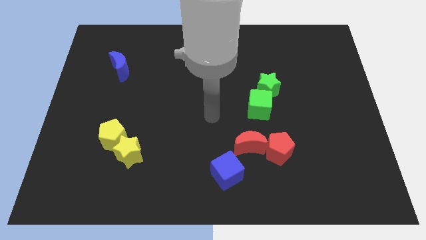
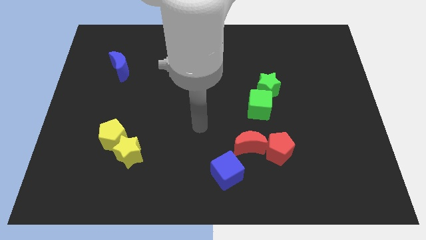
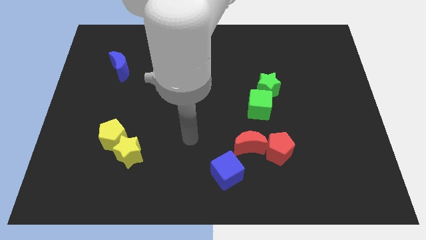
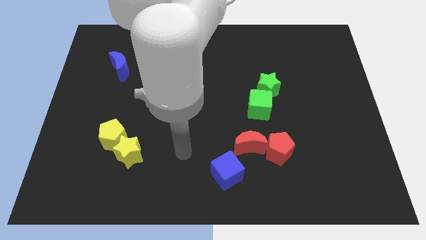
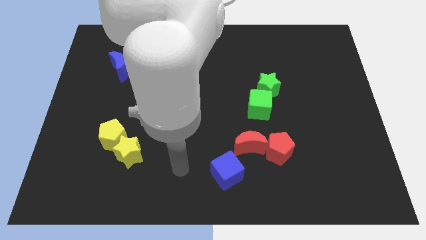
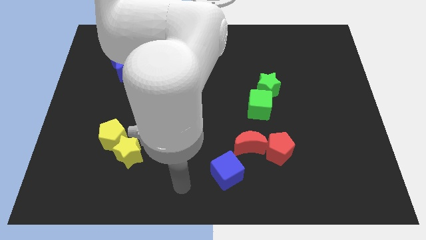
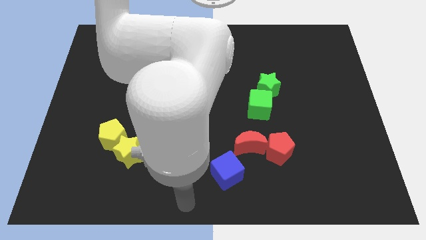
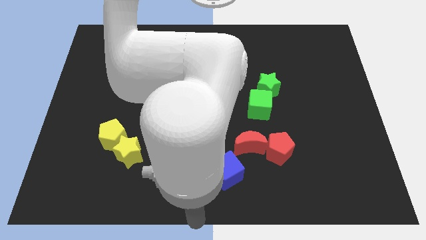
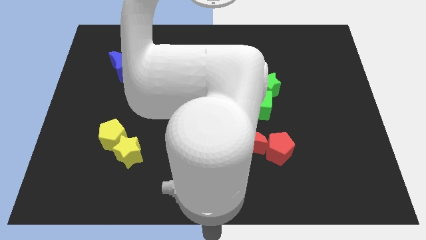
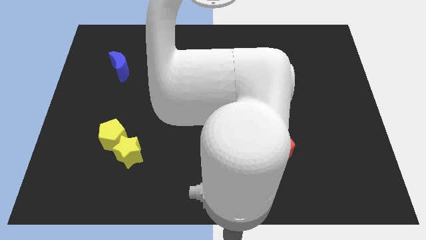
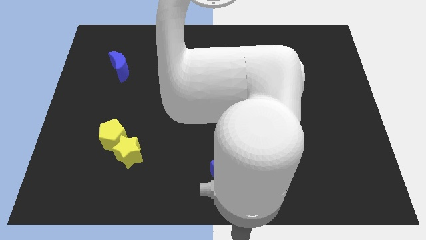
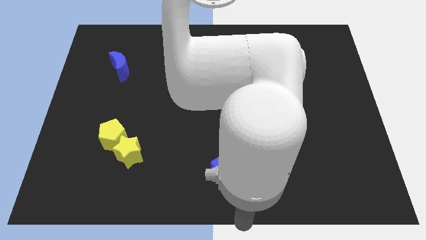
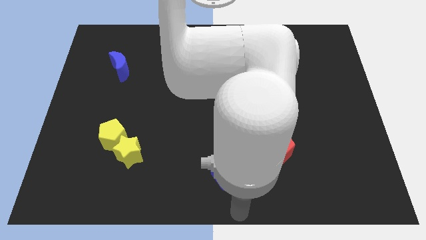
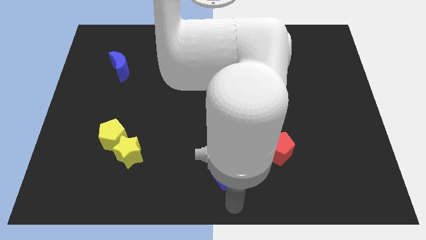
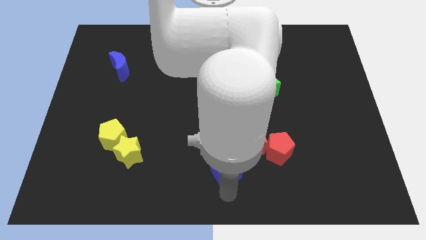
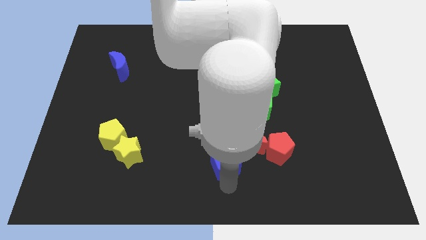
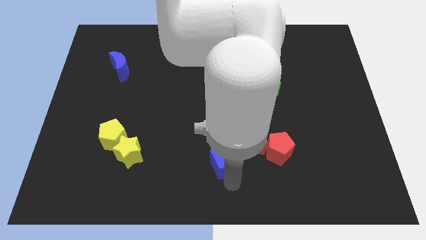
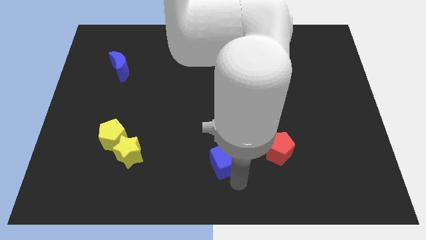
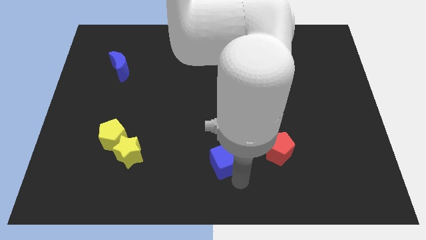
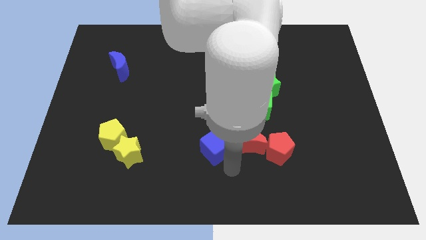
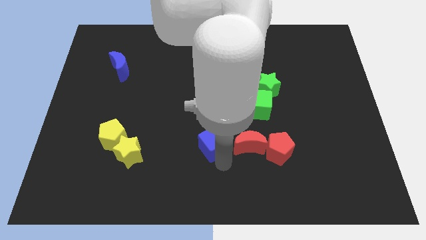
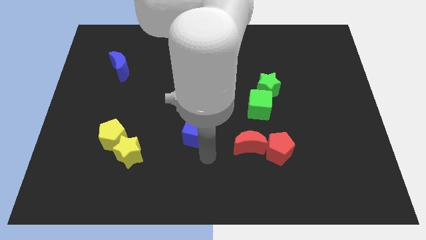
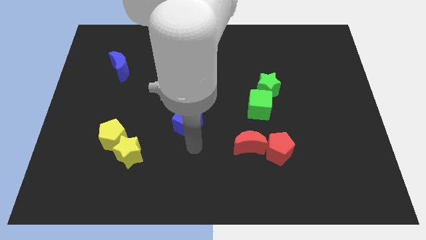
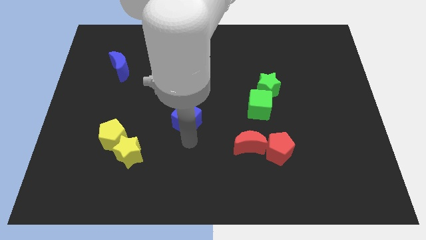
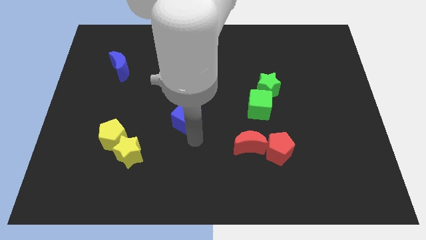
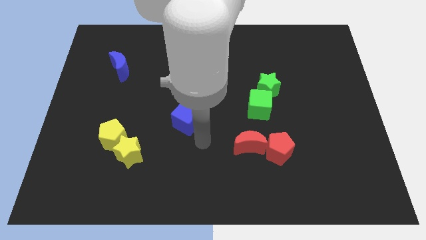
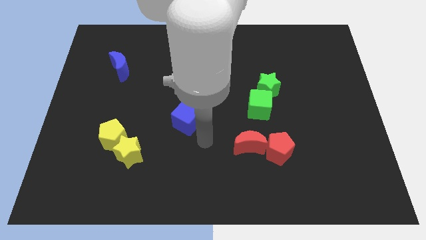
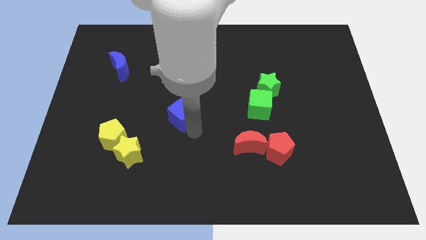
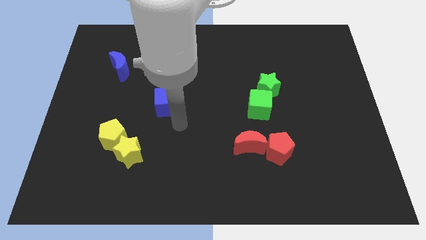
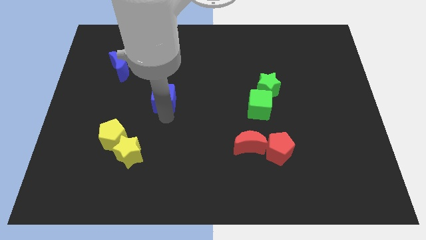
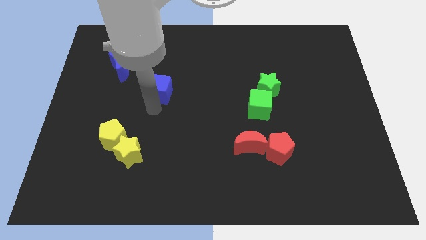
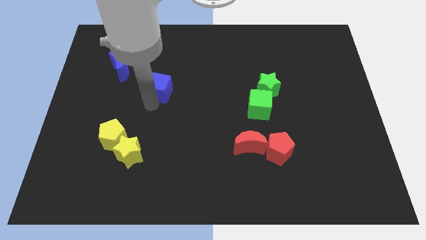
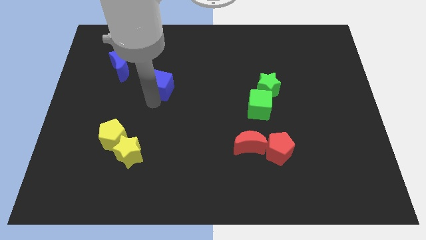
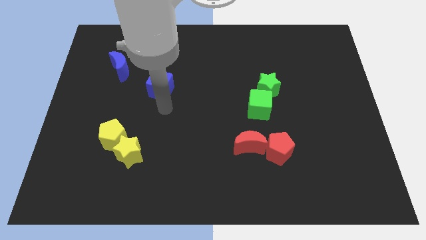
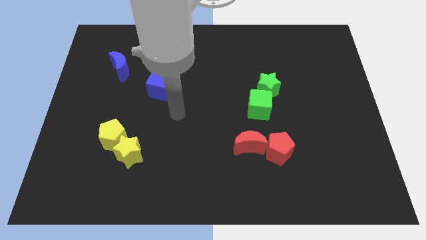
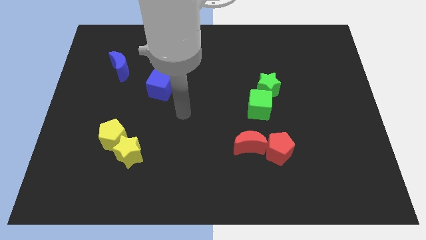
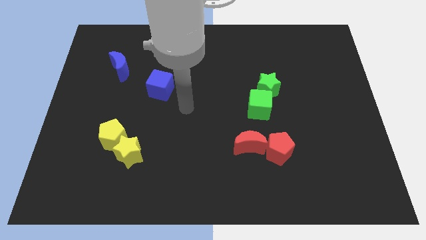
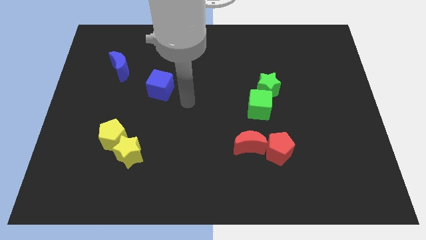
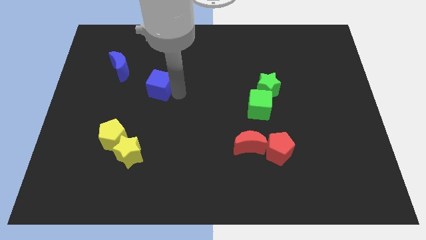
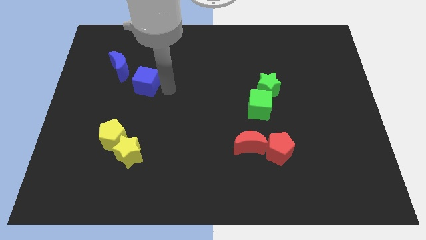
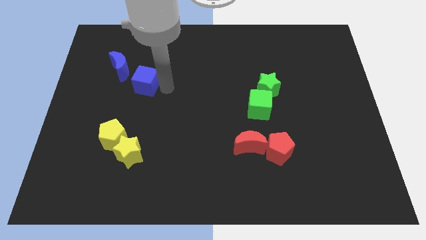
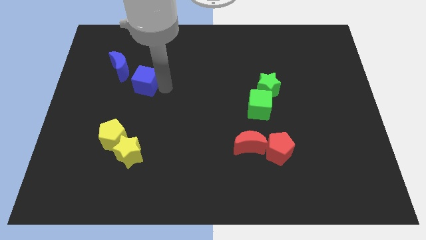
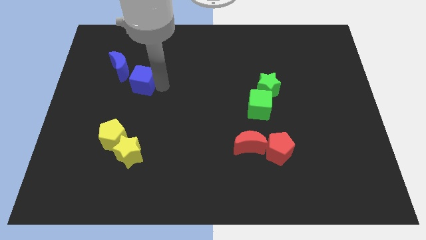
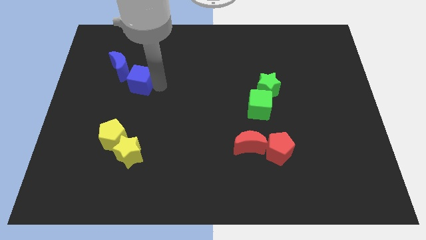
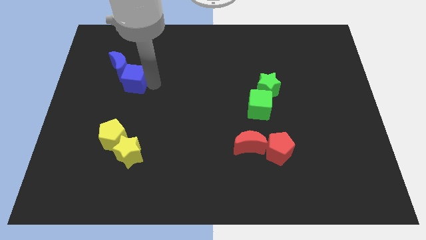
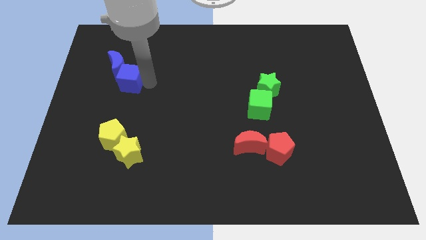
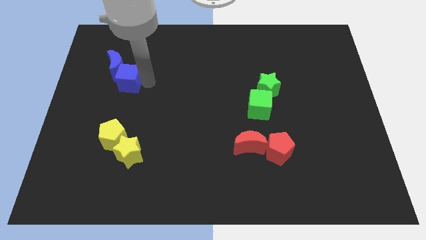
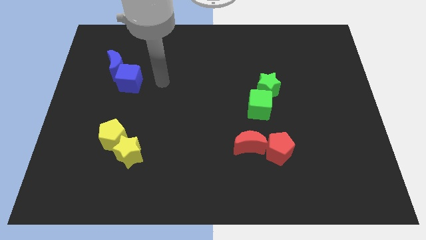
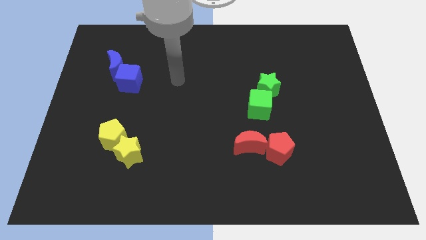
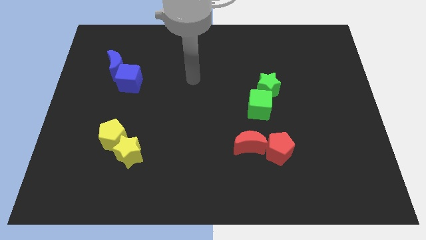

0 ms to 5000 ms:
push the blue cube right side of the blue crescent

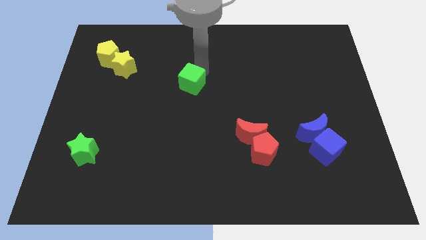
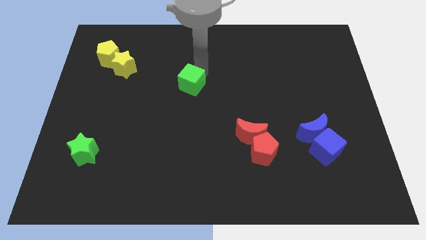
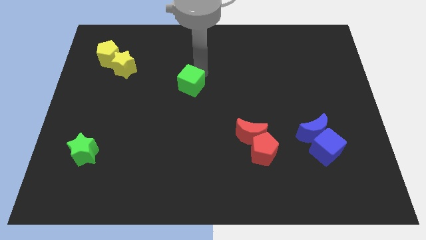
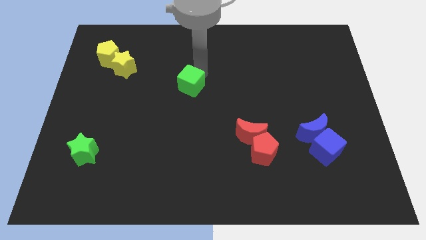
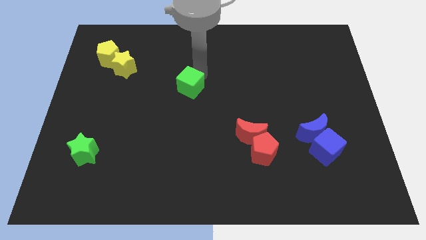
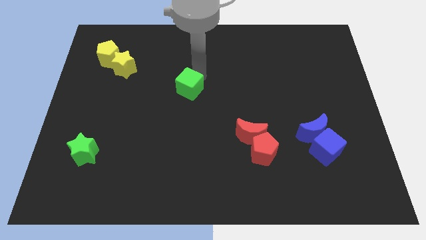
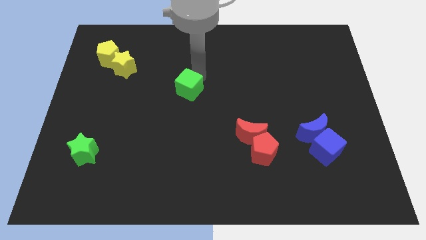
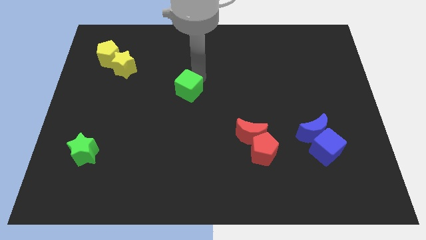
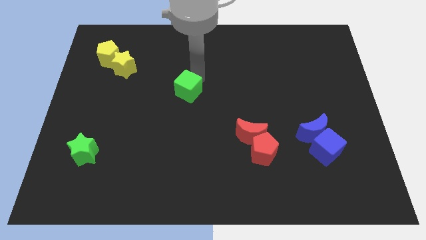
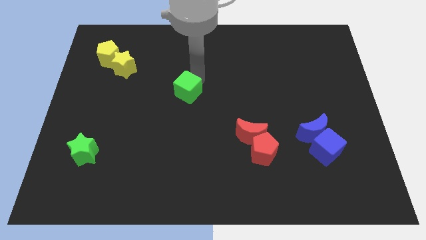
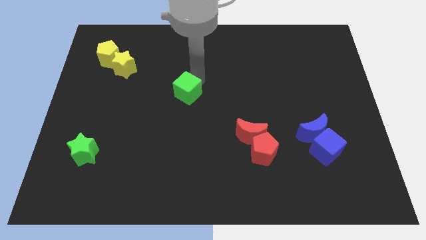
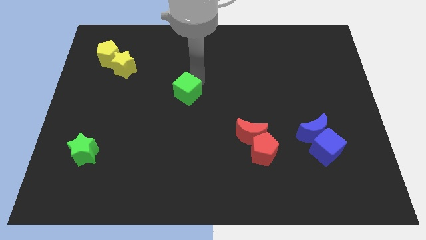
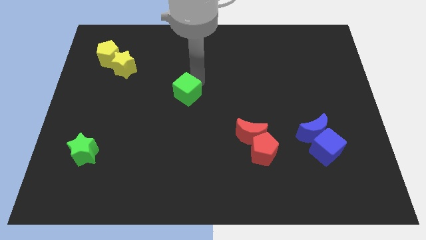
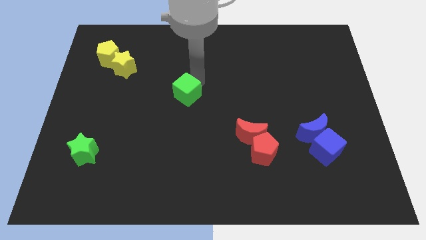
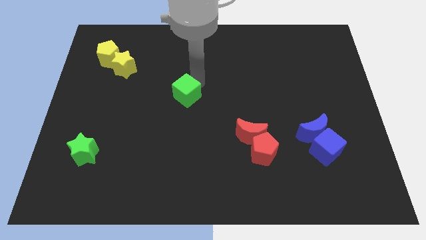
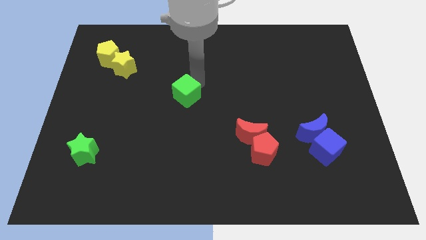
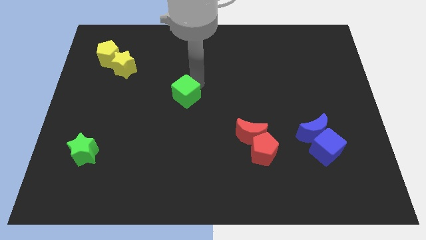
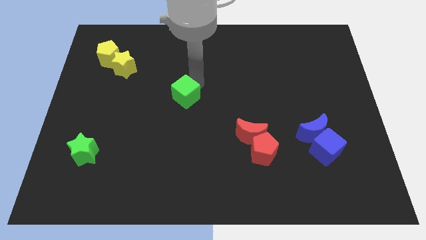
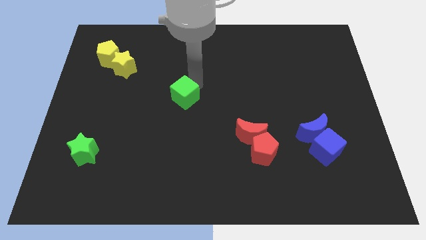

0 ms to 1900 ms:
push green cube diagonally towards yellow star

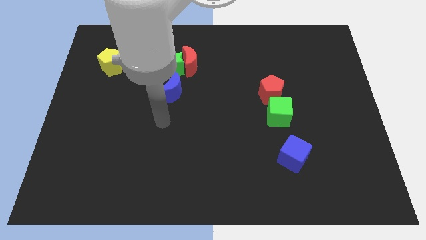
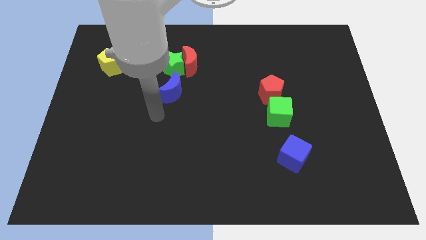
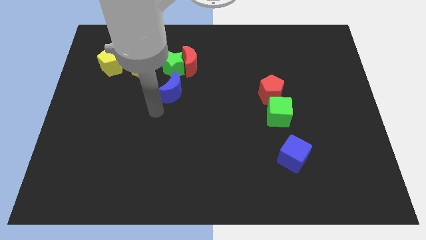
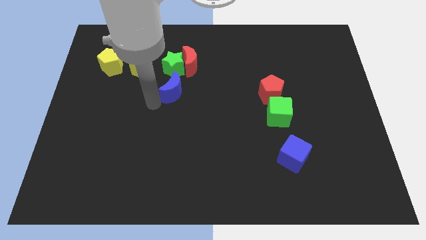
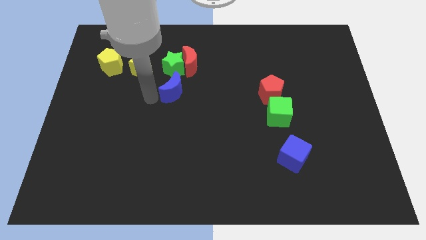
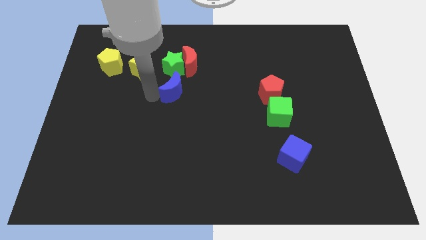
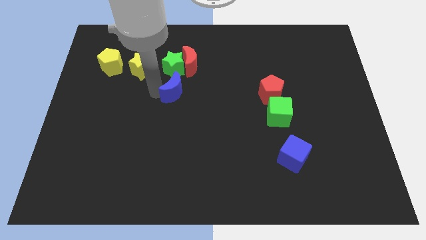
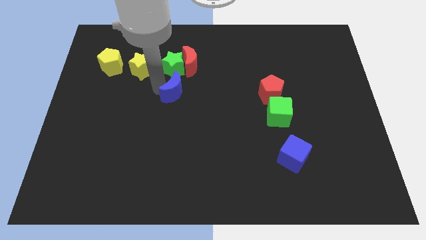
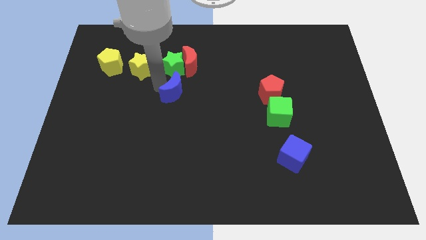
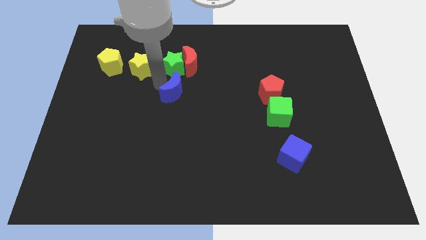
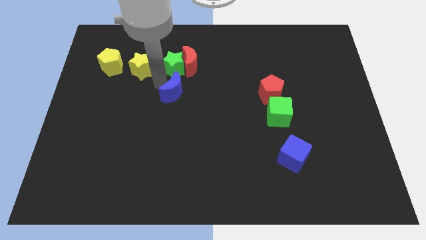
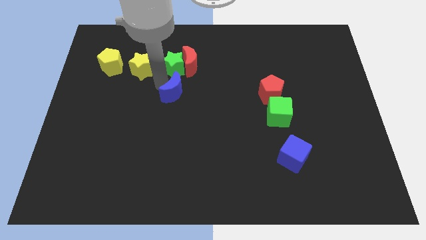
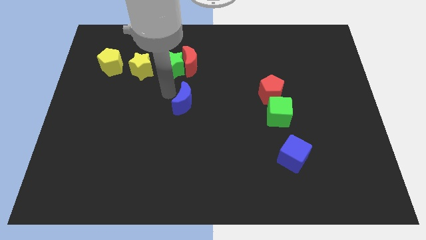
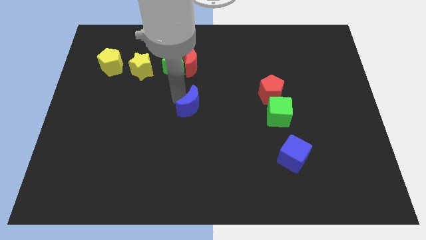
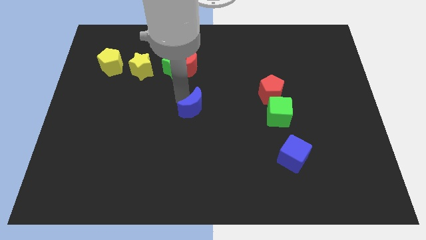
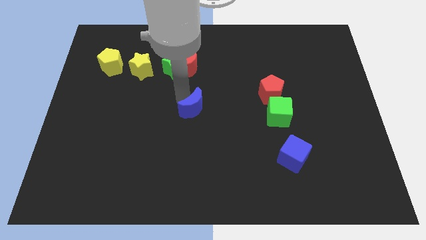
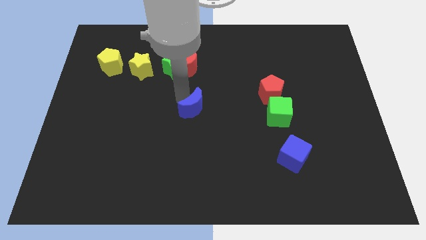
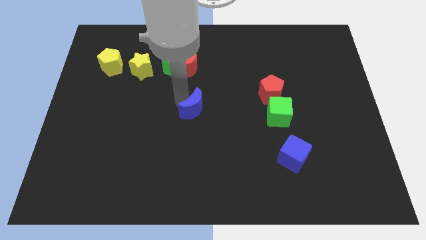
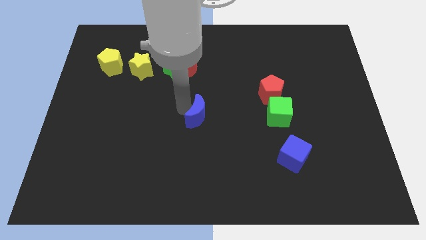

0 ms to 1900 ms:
move the blue moon towards center of the board

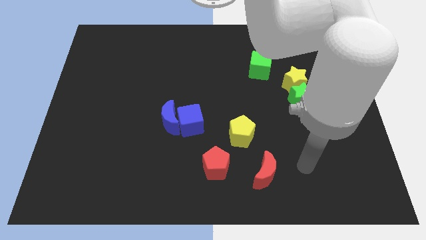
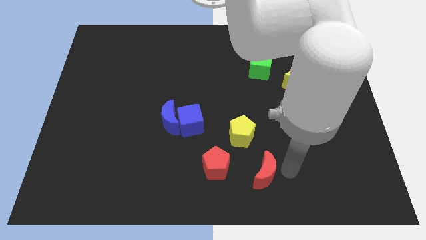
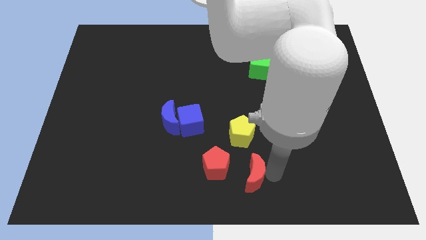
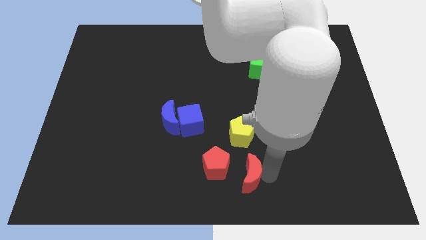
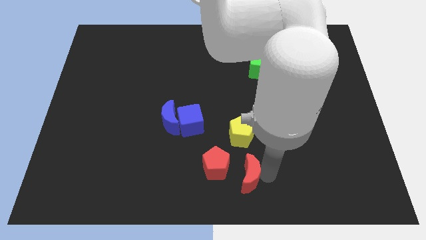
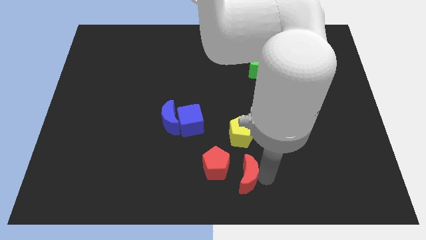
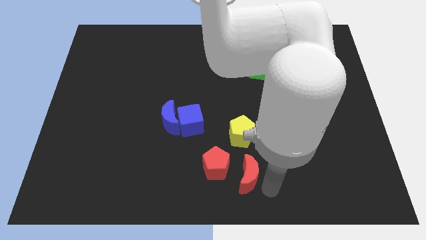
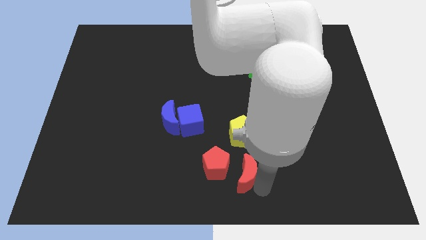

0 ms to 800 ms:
push the red crescent to the right of the red pentagon
